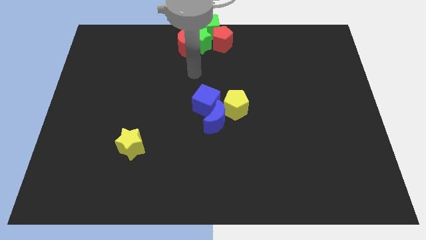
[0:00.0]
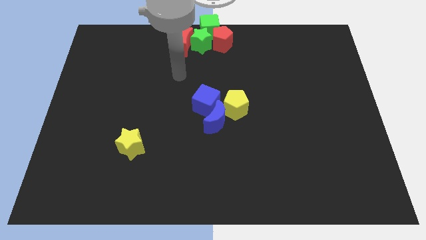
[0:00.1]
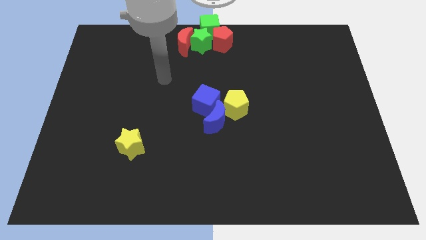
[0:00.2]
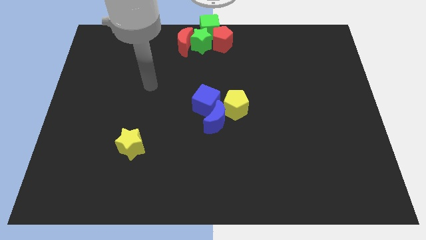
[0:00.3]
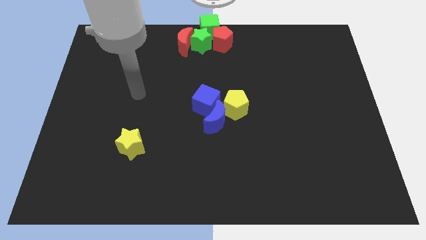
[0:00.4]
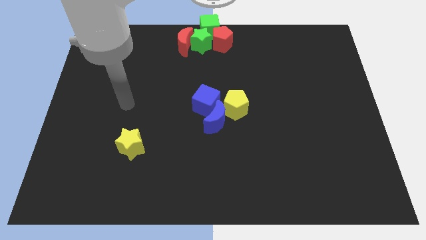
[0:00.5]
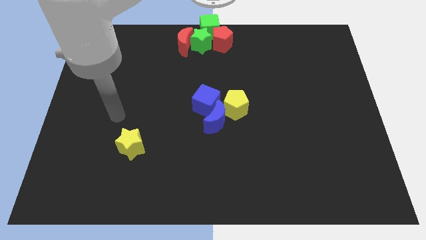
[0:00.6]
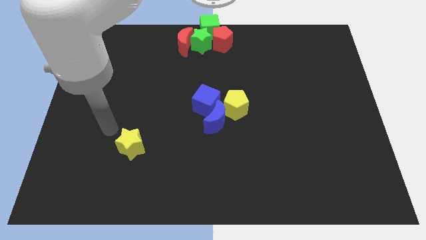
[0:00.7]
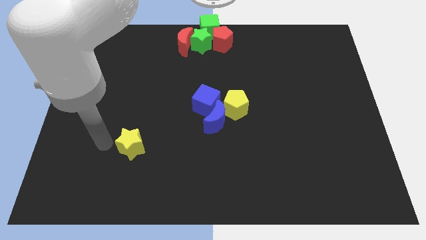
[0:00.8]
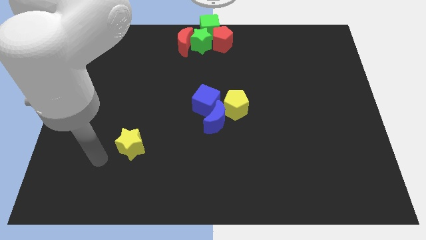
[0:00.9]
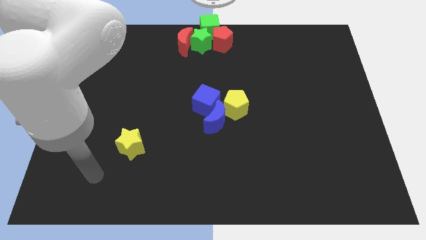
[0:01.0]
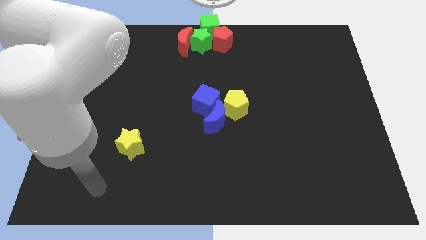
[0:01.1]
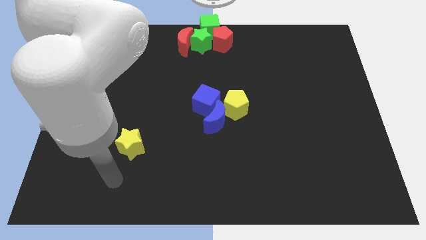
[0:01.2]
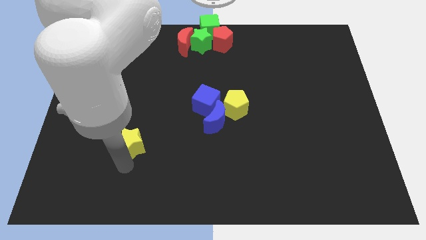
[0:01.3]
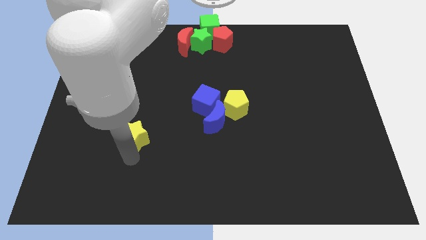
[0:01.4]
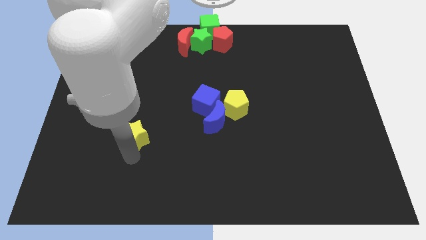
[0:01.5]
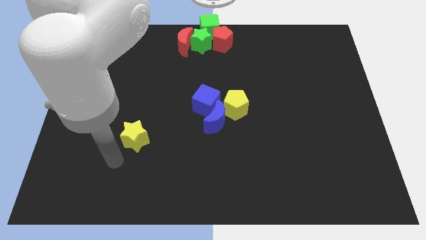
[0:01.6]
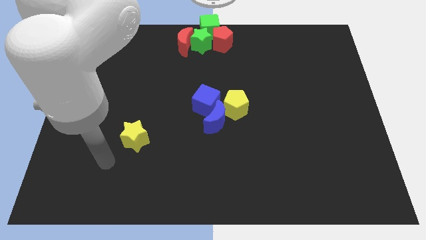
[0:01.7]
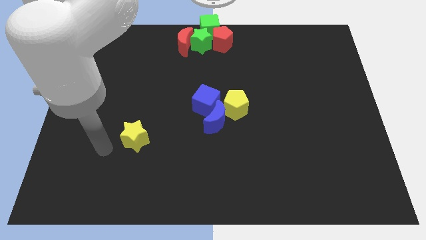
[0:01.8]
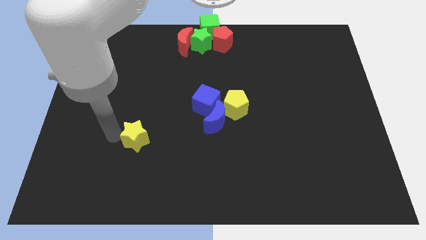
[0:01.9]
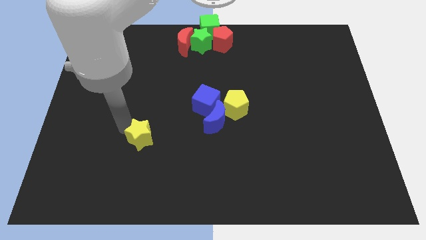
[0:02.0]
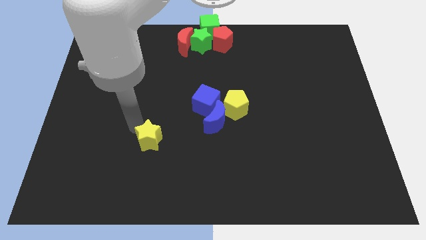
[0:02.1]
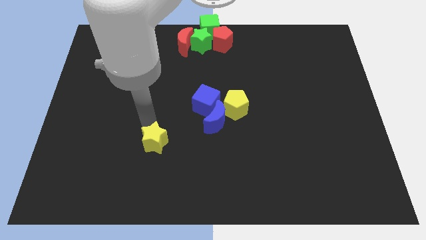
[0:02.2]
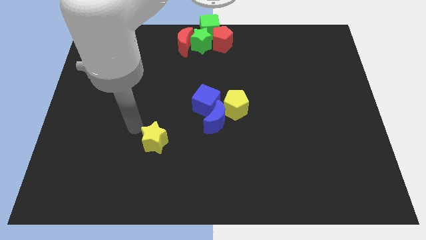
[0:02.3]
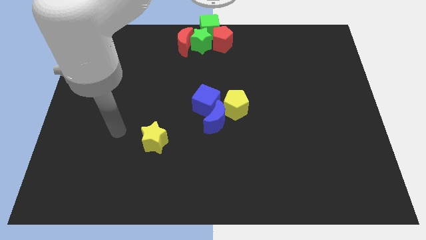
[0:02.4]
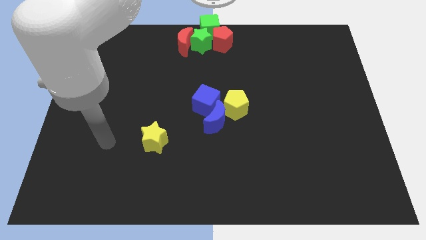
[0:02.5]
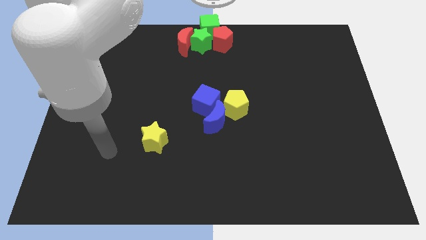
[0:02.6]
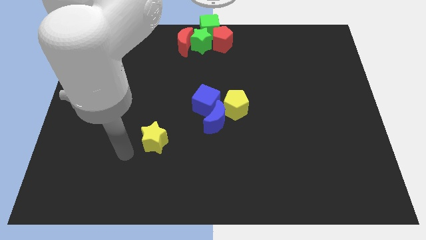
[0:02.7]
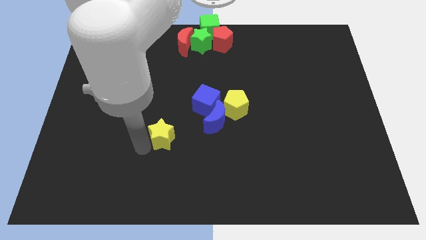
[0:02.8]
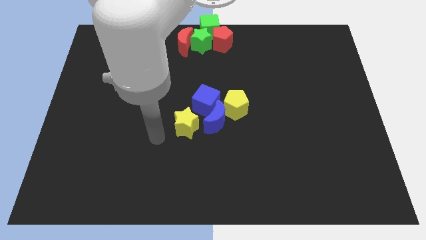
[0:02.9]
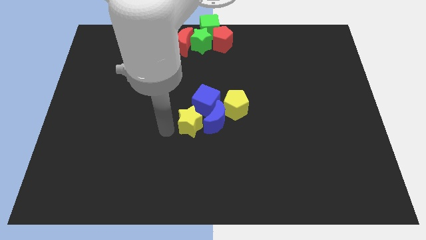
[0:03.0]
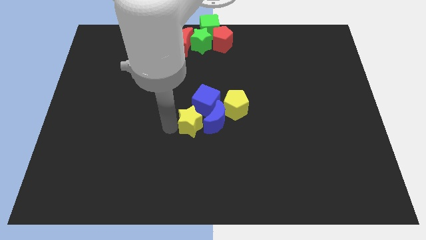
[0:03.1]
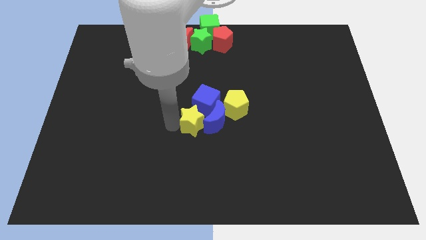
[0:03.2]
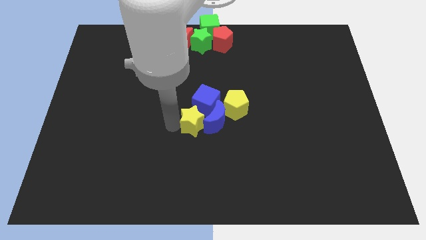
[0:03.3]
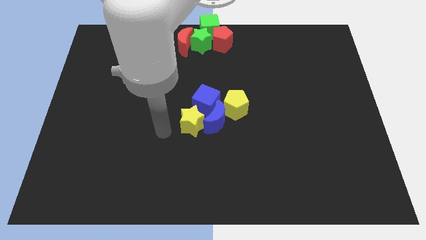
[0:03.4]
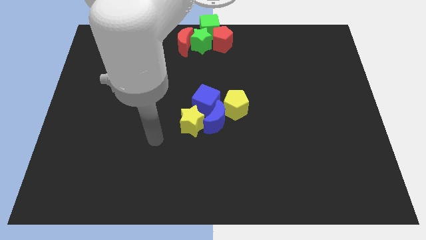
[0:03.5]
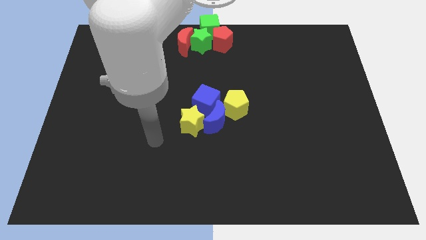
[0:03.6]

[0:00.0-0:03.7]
put the yellow star into the blue cube

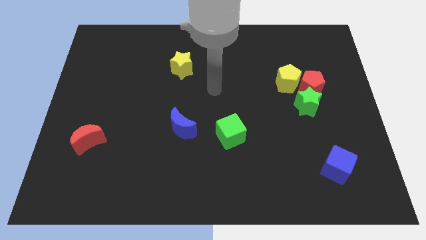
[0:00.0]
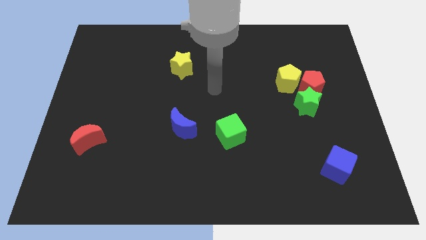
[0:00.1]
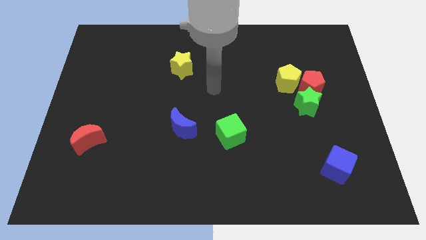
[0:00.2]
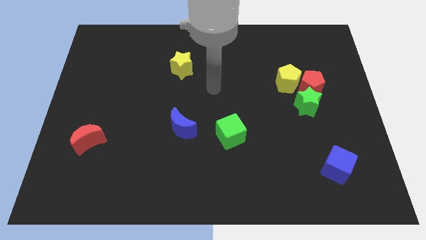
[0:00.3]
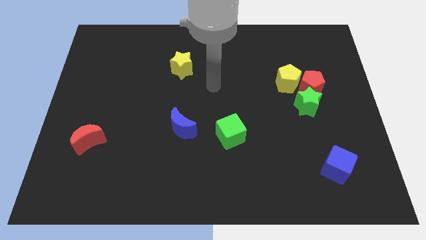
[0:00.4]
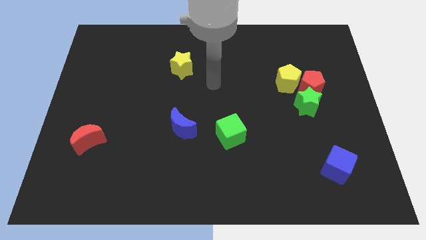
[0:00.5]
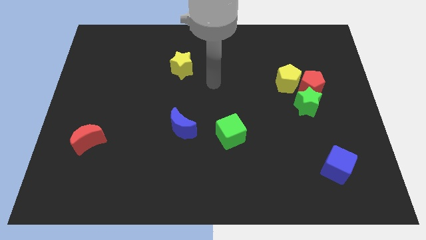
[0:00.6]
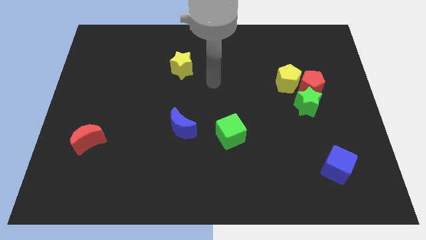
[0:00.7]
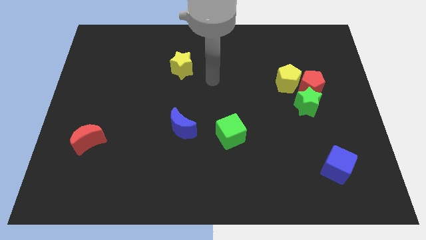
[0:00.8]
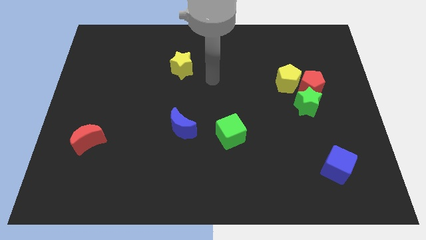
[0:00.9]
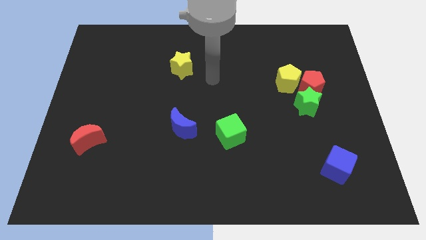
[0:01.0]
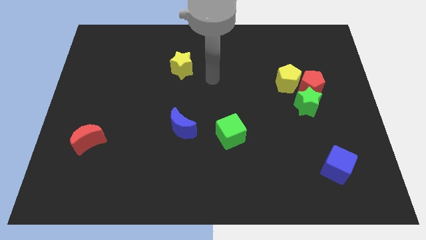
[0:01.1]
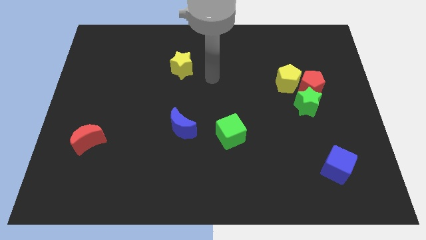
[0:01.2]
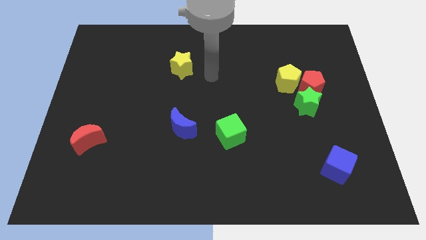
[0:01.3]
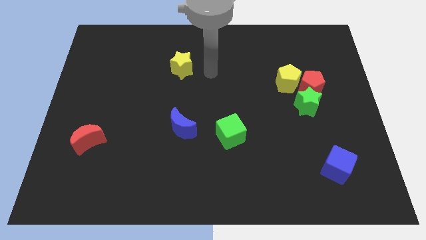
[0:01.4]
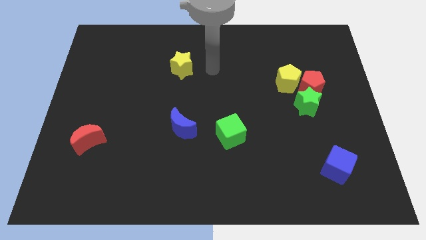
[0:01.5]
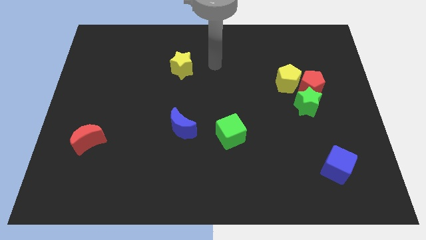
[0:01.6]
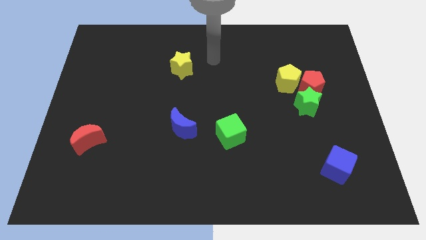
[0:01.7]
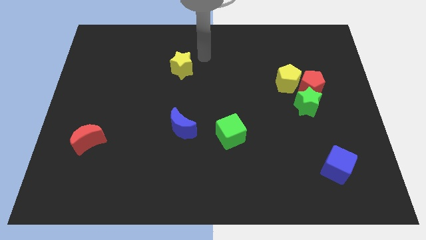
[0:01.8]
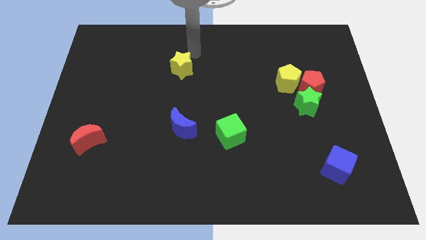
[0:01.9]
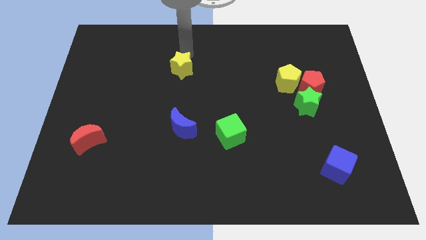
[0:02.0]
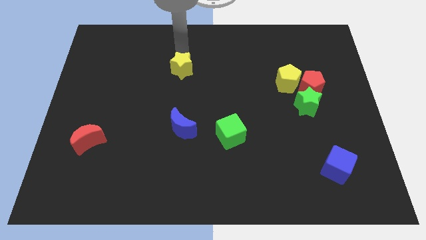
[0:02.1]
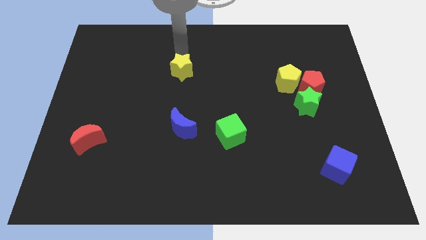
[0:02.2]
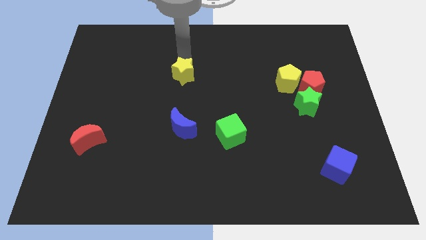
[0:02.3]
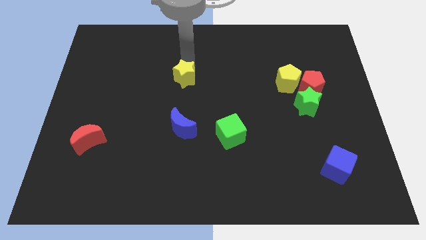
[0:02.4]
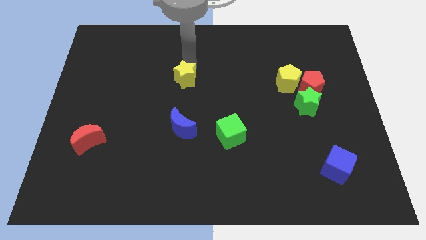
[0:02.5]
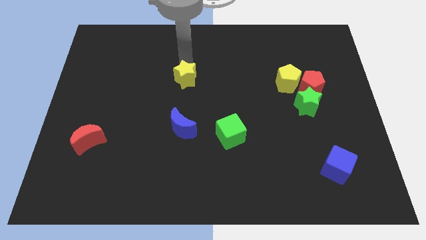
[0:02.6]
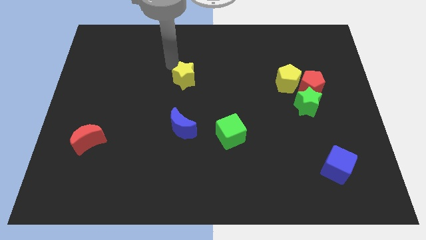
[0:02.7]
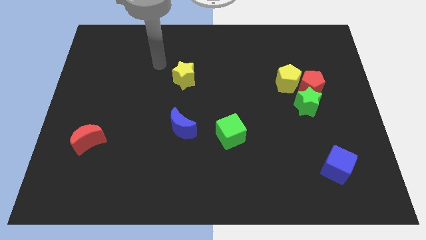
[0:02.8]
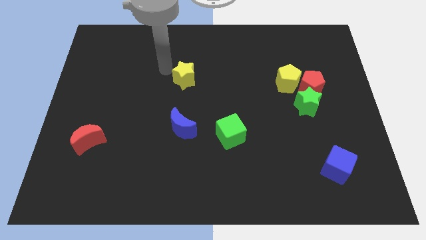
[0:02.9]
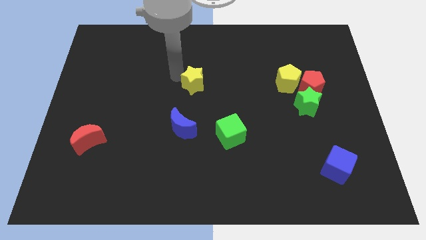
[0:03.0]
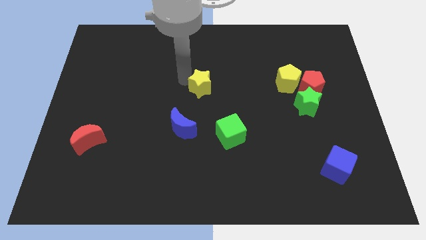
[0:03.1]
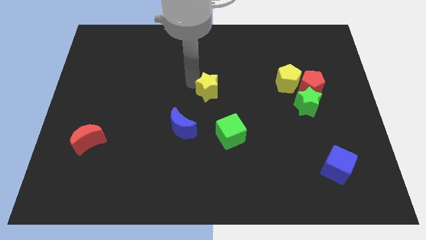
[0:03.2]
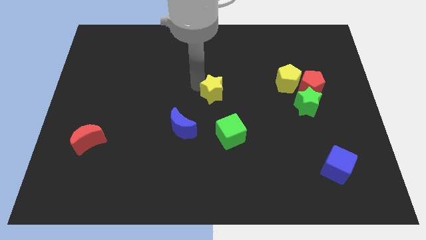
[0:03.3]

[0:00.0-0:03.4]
put the yellow star at the center of the board

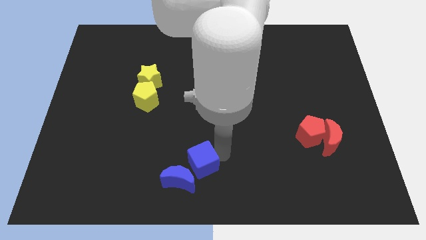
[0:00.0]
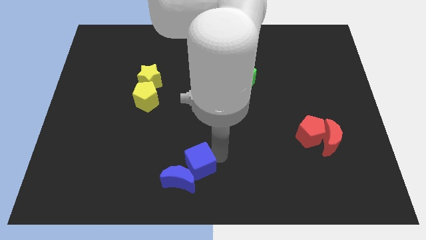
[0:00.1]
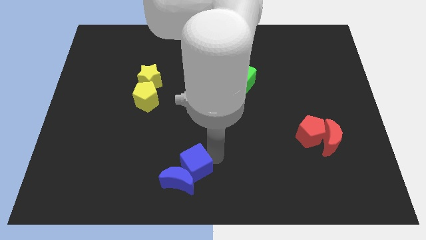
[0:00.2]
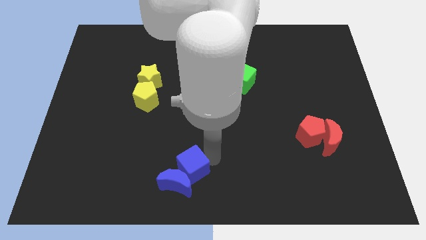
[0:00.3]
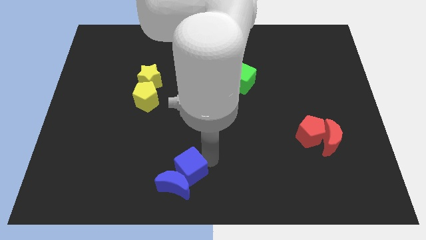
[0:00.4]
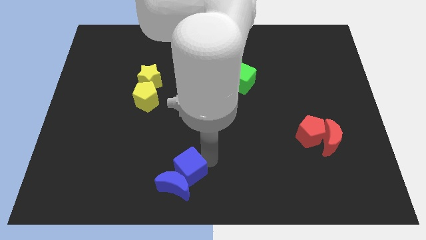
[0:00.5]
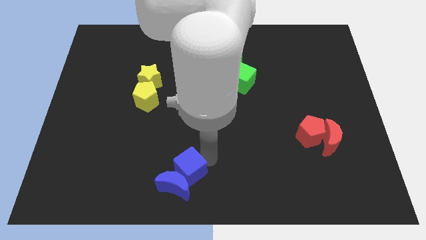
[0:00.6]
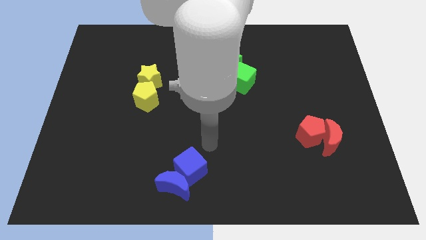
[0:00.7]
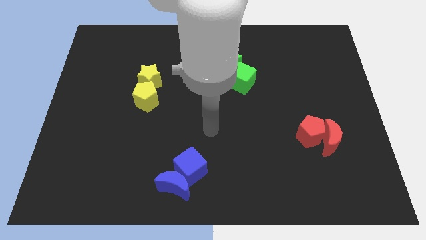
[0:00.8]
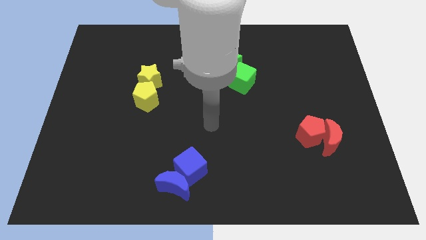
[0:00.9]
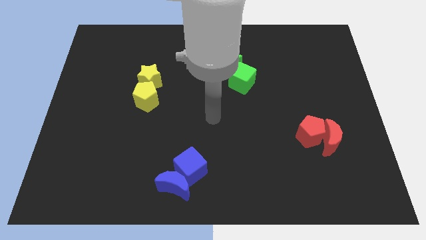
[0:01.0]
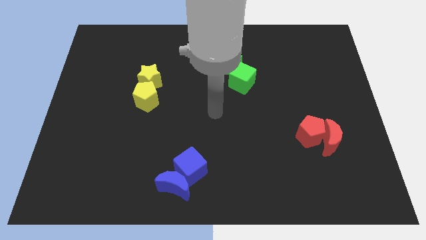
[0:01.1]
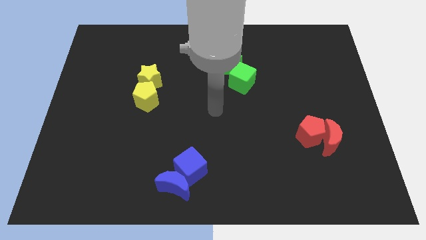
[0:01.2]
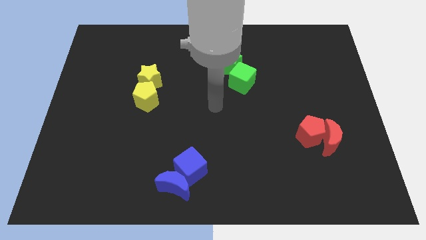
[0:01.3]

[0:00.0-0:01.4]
move the arm away from the blue cube

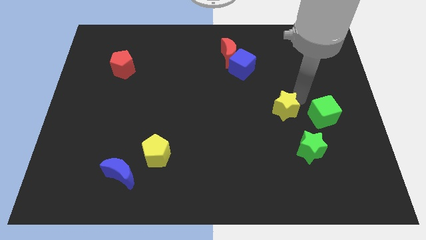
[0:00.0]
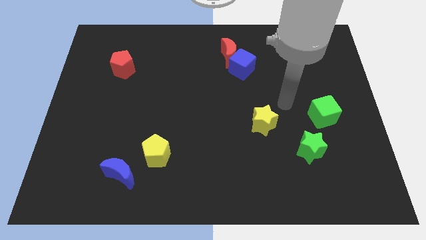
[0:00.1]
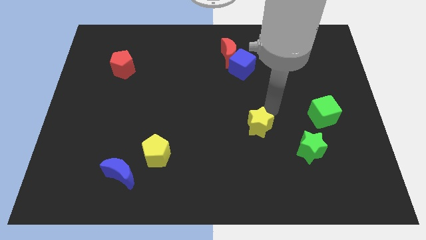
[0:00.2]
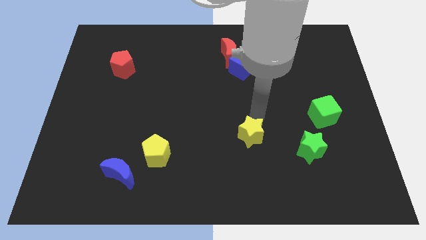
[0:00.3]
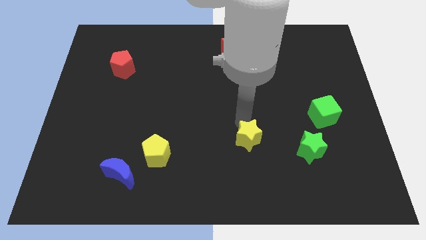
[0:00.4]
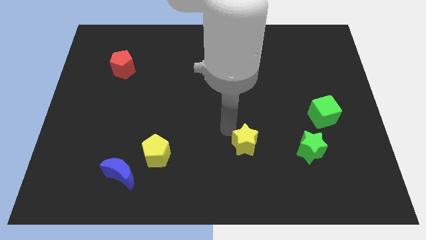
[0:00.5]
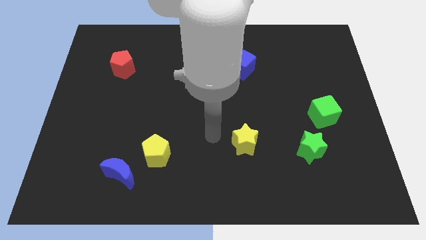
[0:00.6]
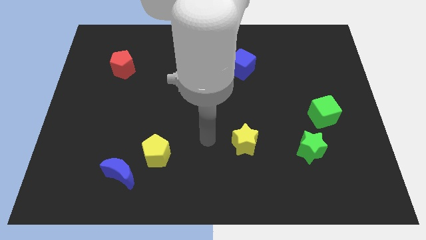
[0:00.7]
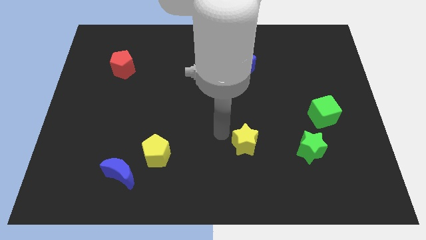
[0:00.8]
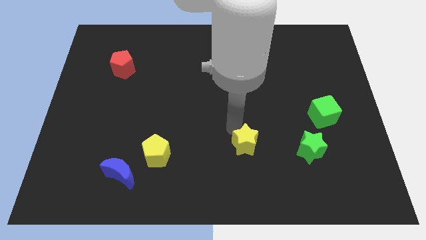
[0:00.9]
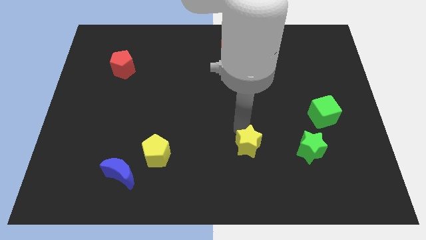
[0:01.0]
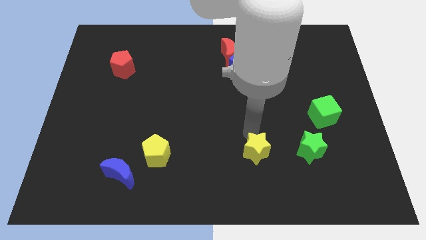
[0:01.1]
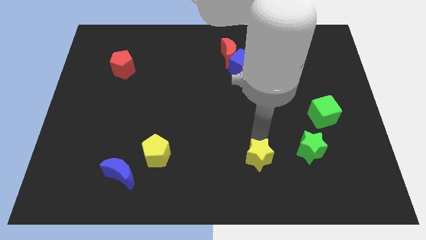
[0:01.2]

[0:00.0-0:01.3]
place the yellow star in between the green star and yellow pentagon
